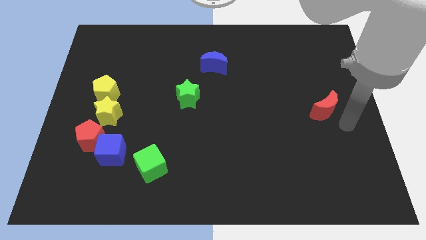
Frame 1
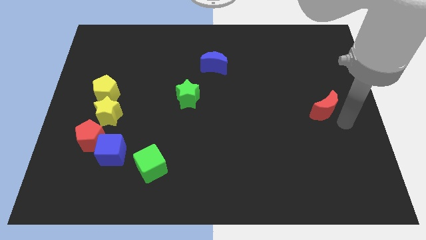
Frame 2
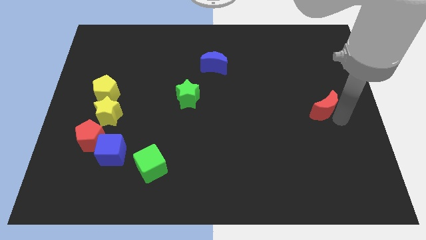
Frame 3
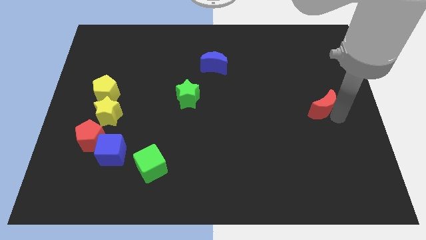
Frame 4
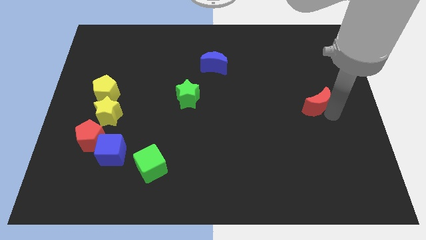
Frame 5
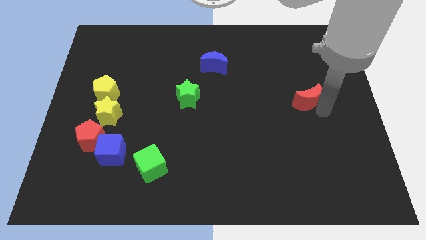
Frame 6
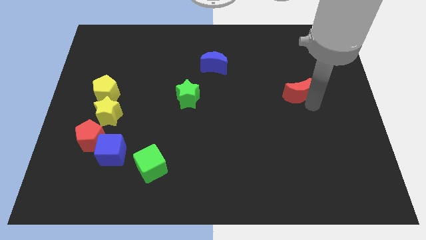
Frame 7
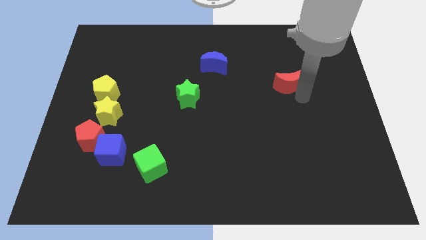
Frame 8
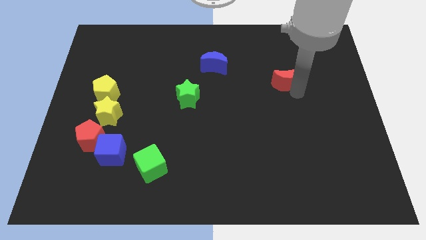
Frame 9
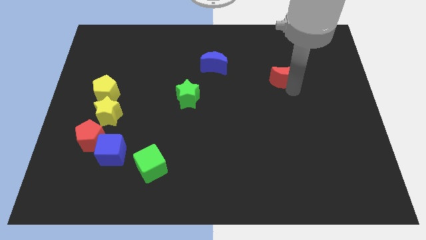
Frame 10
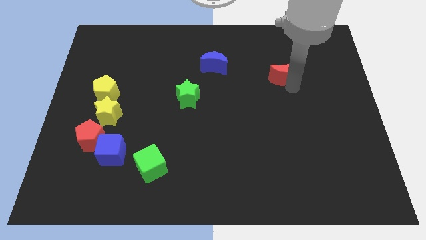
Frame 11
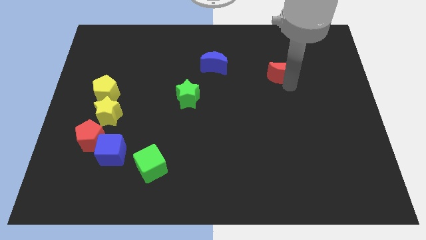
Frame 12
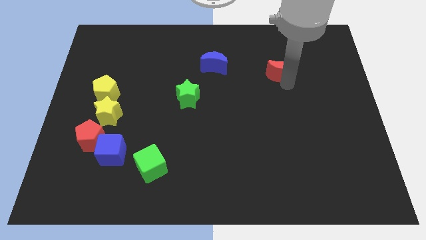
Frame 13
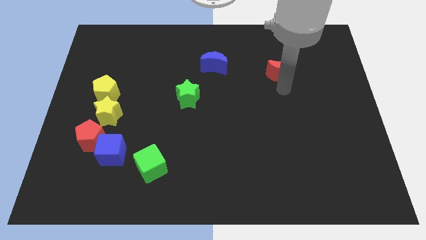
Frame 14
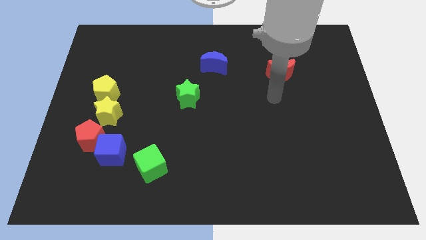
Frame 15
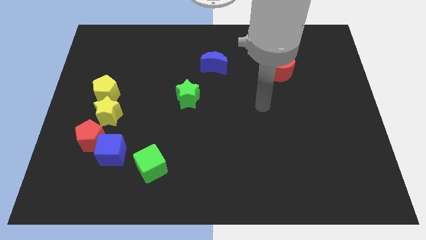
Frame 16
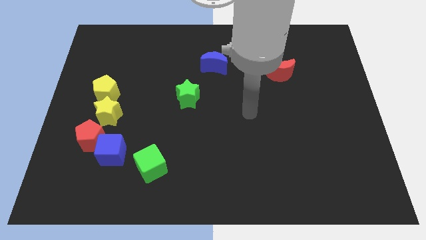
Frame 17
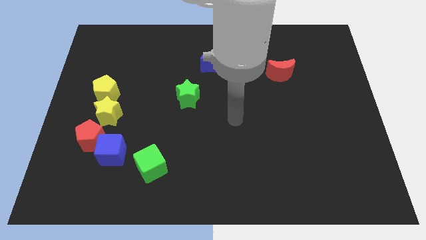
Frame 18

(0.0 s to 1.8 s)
push the red crescent center left to top side of the board

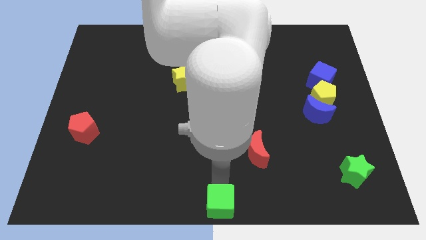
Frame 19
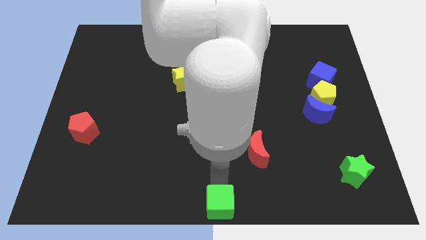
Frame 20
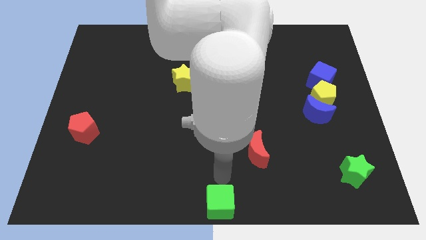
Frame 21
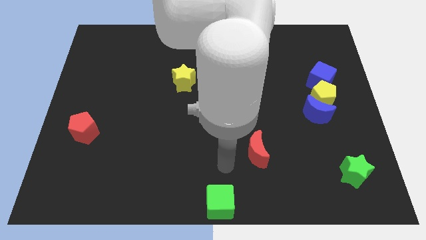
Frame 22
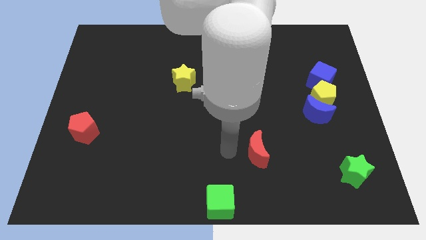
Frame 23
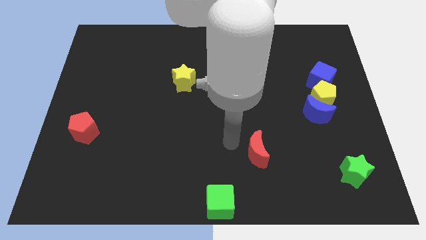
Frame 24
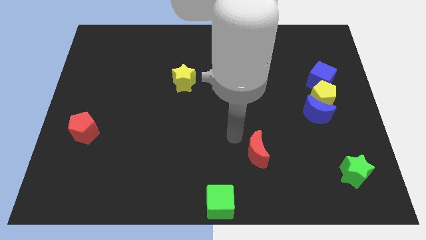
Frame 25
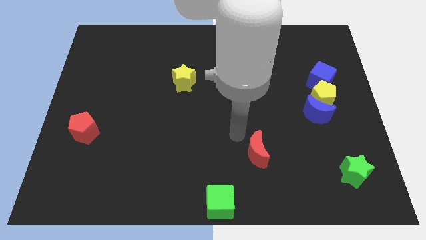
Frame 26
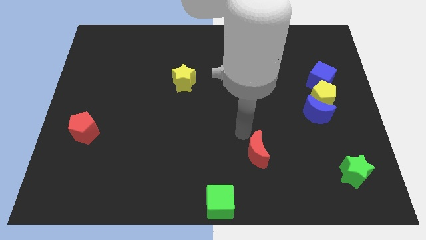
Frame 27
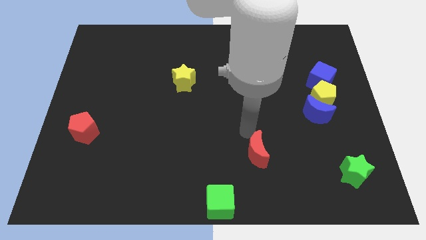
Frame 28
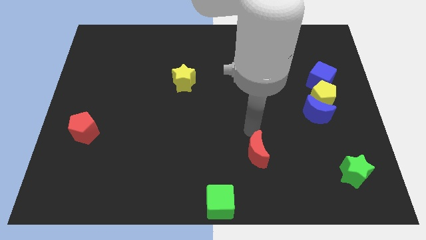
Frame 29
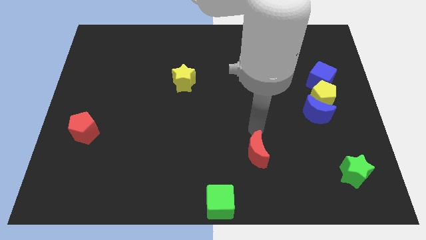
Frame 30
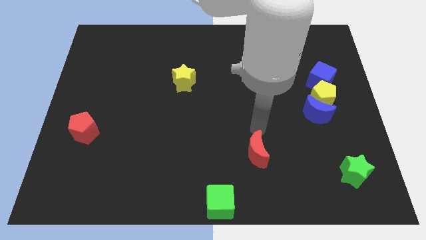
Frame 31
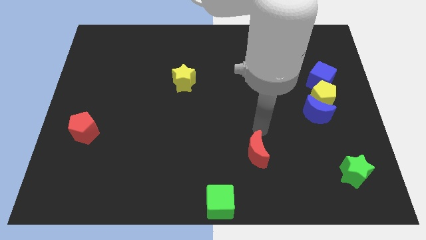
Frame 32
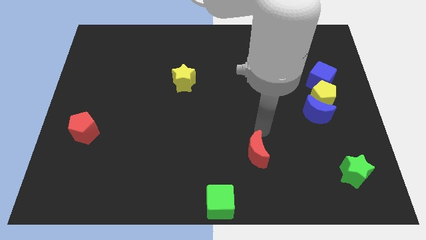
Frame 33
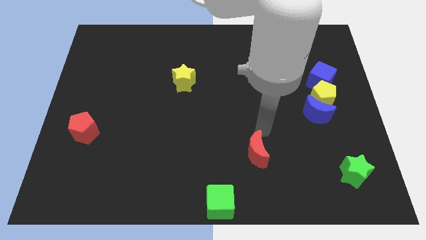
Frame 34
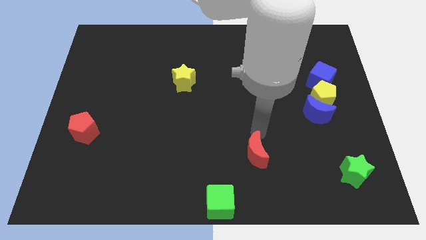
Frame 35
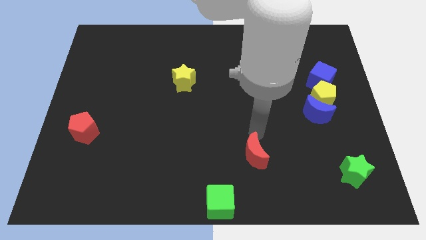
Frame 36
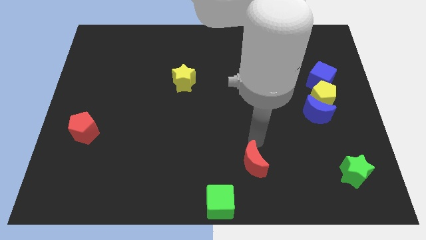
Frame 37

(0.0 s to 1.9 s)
slightly push the red moon towards the green cube

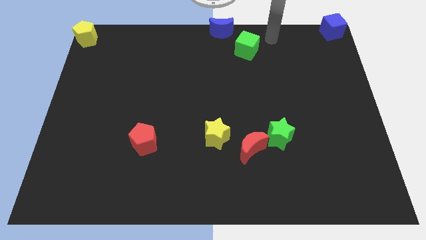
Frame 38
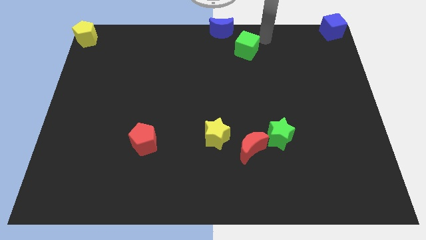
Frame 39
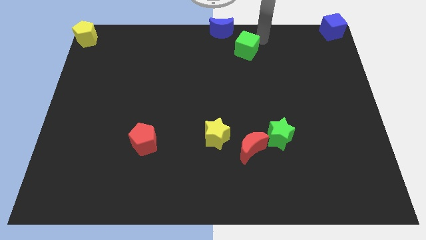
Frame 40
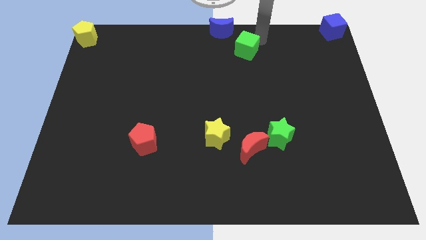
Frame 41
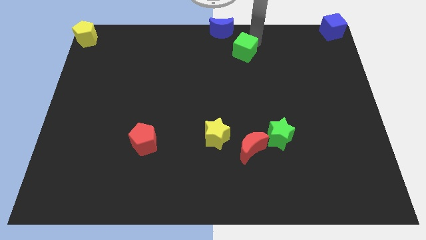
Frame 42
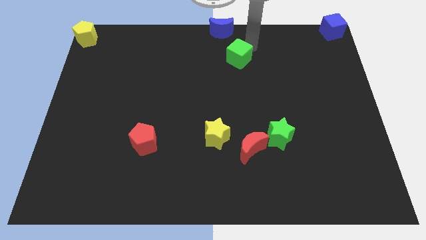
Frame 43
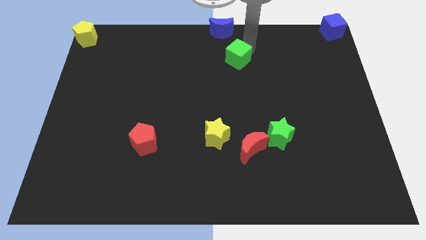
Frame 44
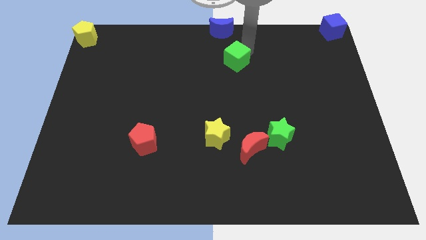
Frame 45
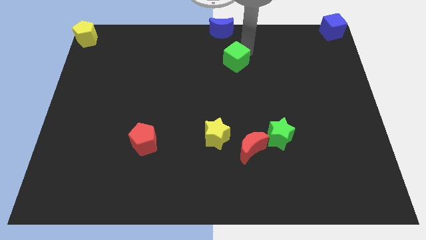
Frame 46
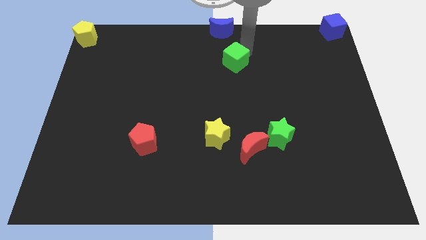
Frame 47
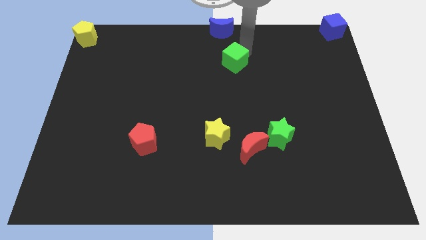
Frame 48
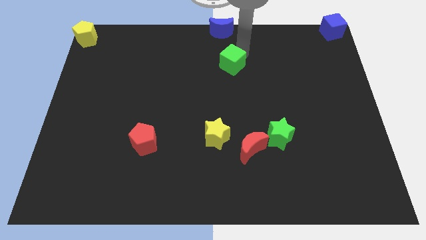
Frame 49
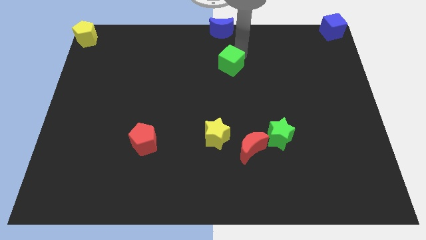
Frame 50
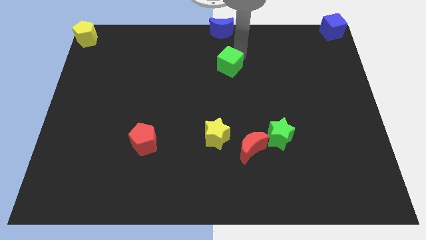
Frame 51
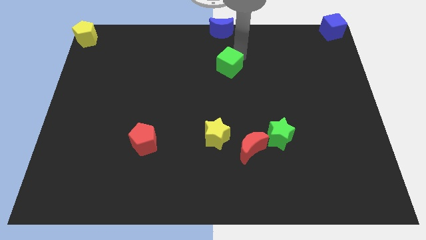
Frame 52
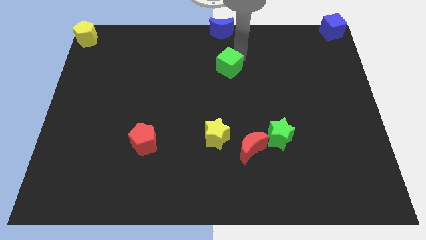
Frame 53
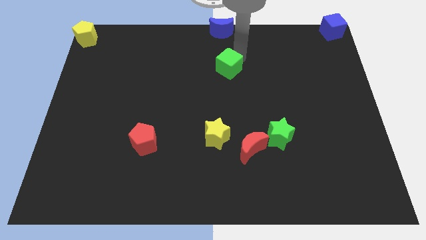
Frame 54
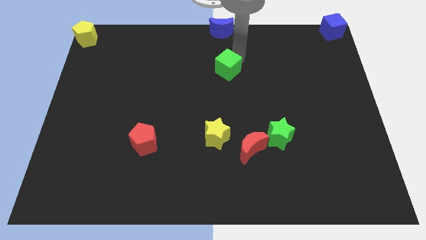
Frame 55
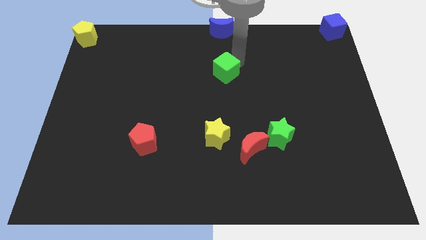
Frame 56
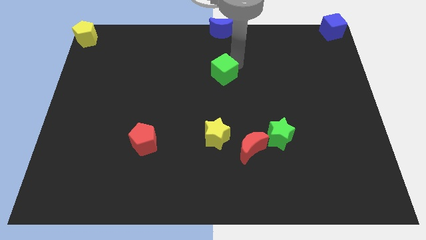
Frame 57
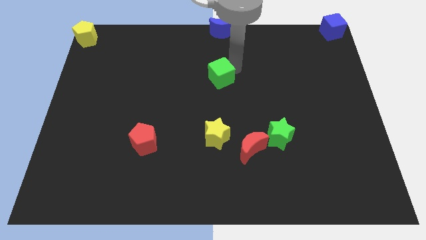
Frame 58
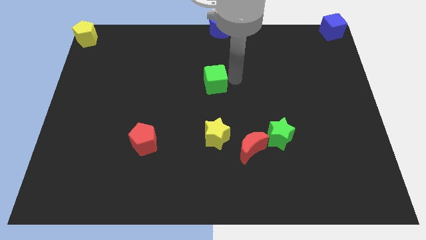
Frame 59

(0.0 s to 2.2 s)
place the green cube above the yellow star

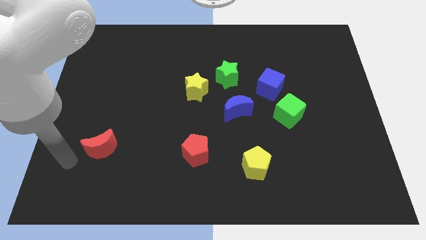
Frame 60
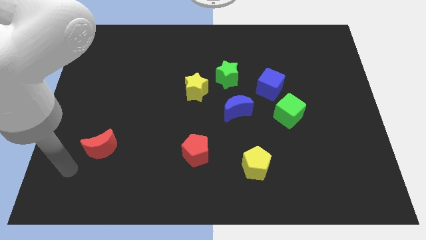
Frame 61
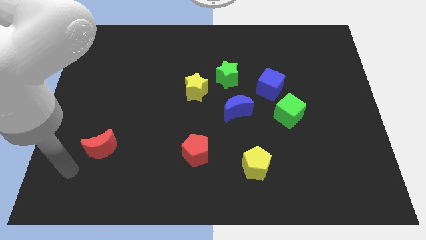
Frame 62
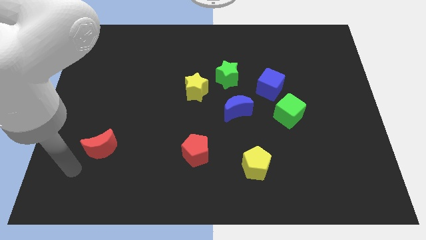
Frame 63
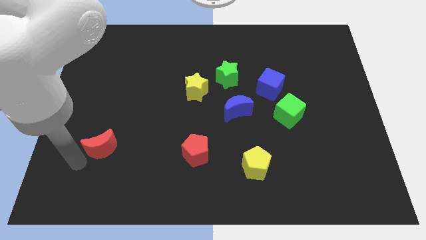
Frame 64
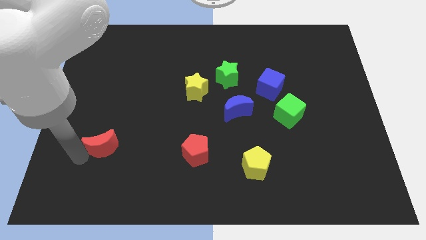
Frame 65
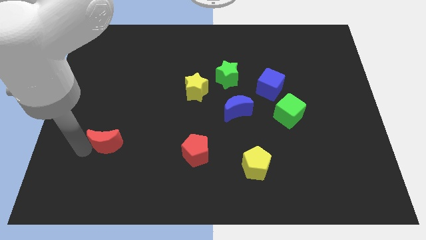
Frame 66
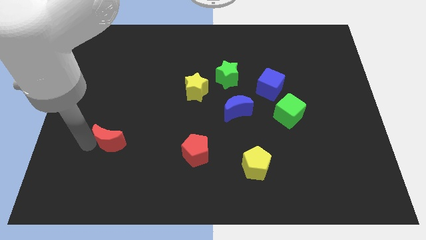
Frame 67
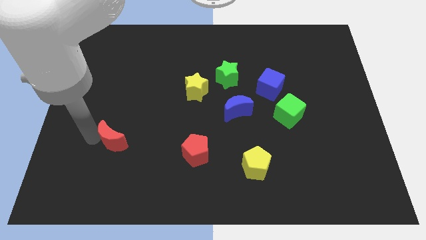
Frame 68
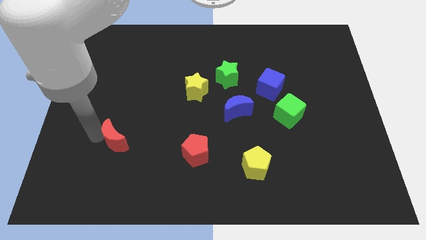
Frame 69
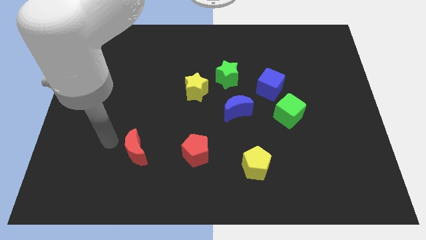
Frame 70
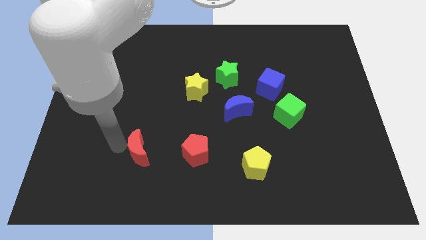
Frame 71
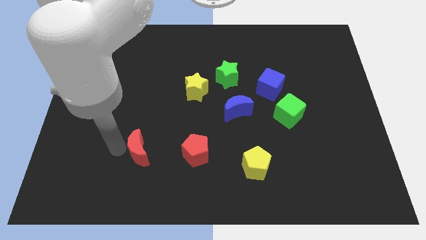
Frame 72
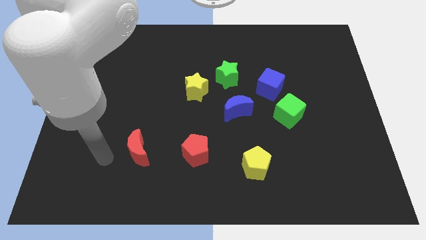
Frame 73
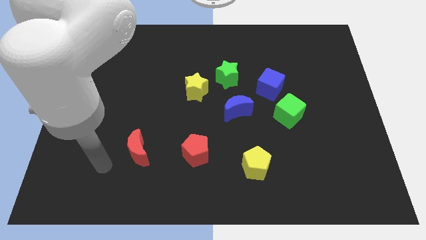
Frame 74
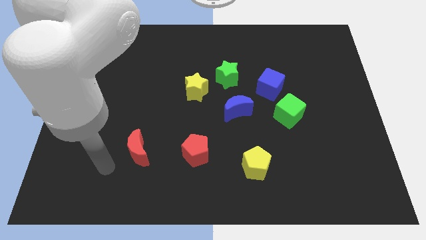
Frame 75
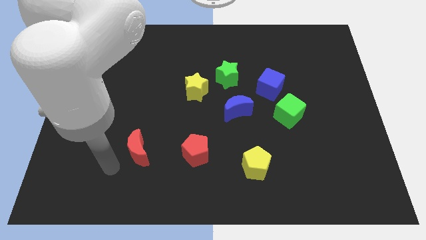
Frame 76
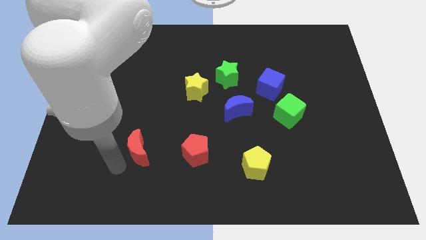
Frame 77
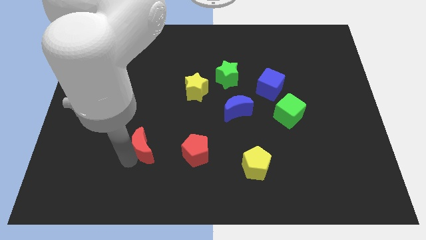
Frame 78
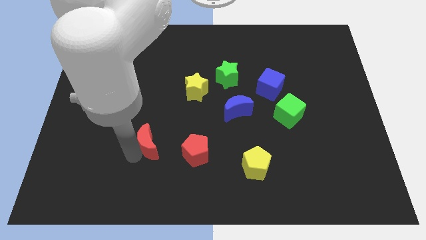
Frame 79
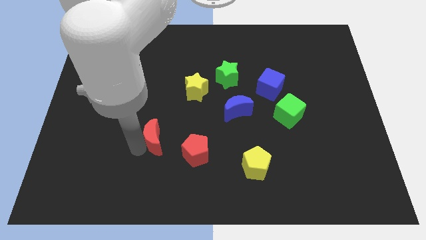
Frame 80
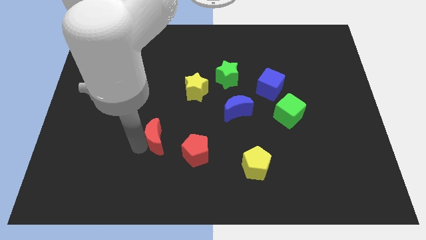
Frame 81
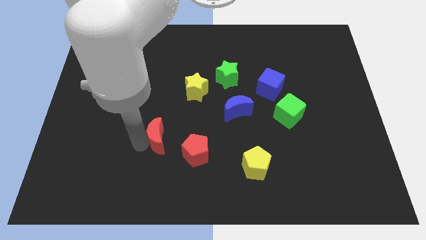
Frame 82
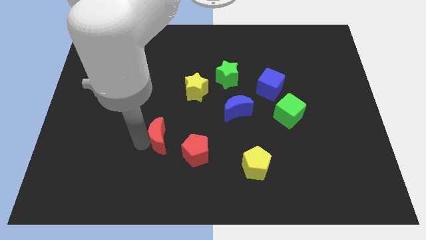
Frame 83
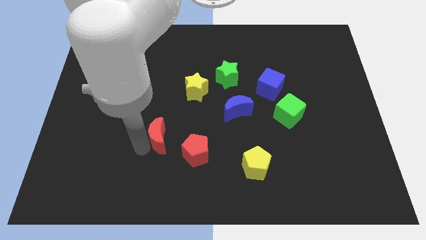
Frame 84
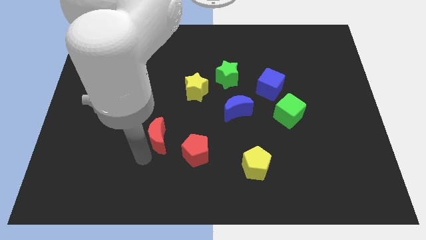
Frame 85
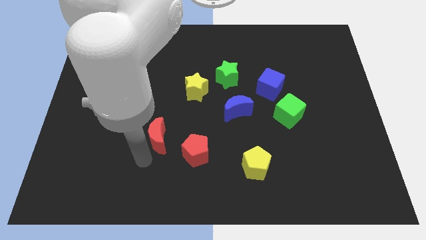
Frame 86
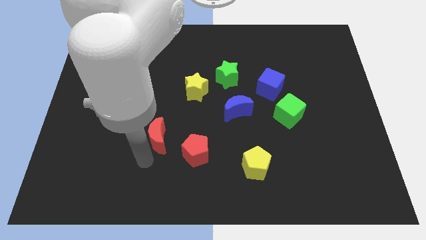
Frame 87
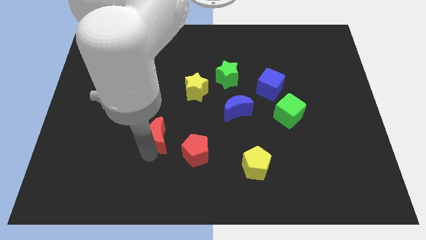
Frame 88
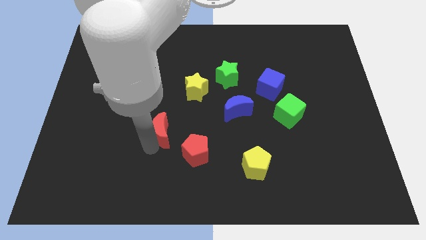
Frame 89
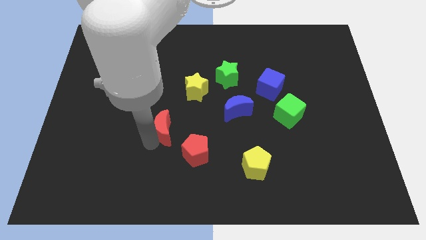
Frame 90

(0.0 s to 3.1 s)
place the red moon diagonal to the yellow star
